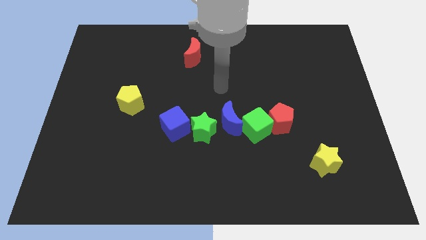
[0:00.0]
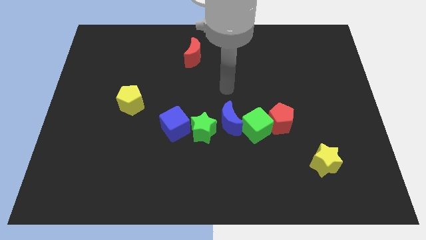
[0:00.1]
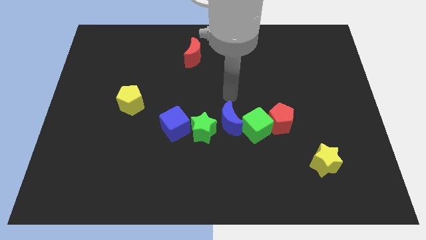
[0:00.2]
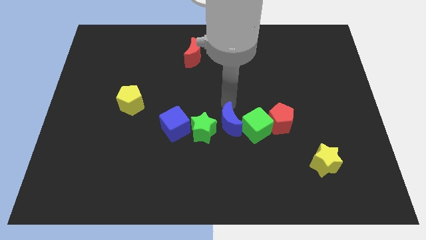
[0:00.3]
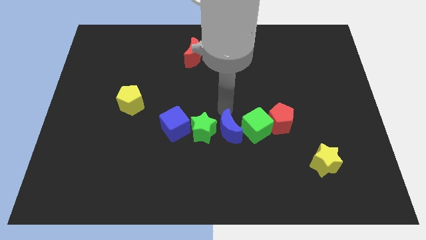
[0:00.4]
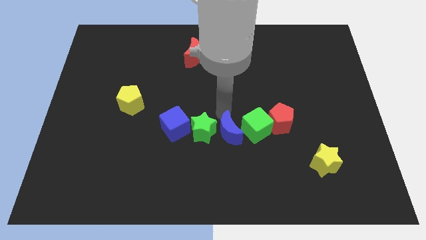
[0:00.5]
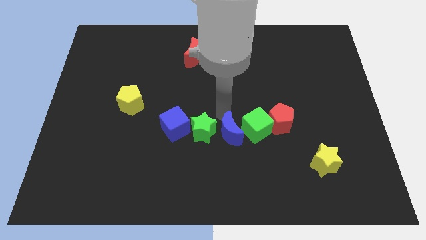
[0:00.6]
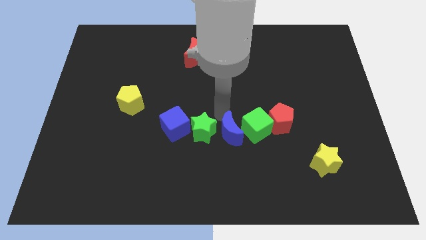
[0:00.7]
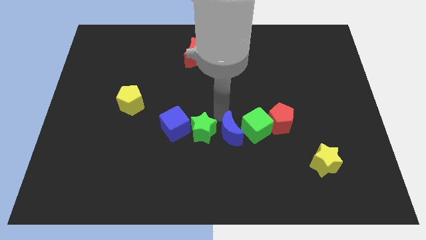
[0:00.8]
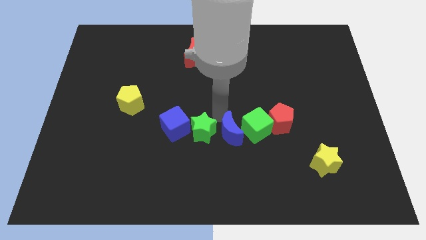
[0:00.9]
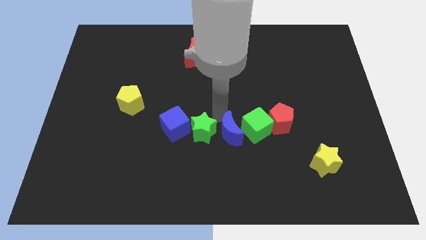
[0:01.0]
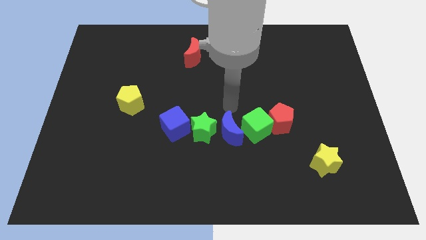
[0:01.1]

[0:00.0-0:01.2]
move the blue crescent slightly to the bottom line of blocks

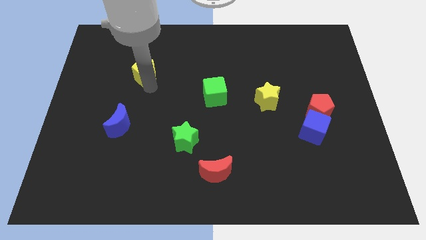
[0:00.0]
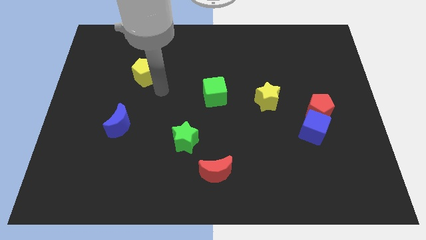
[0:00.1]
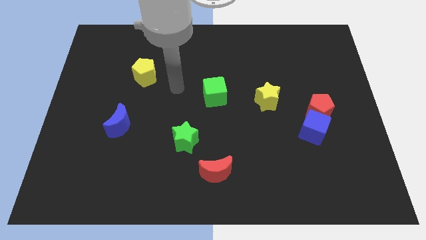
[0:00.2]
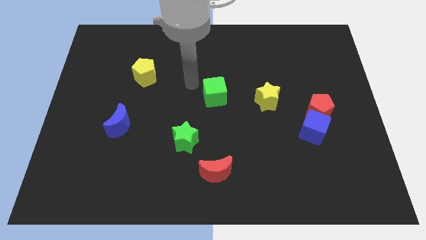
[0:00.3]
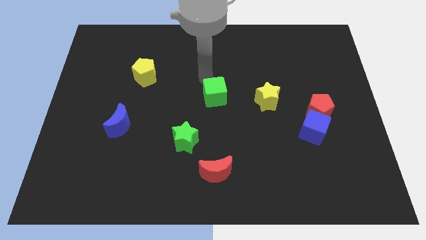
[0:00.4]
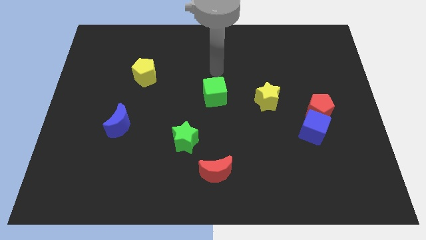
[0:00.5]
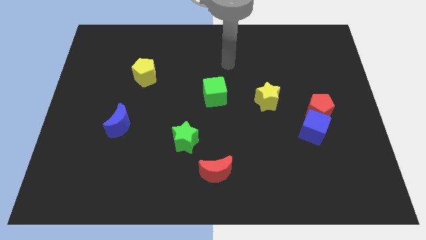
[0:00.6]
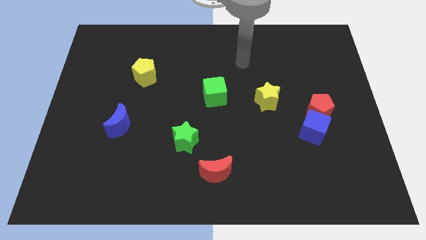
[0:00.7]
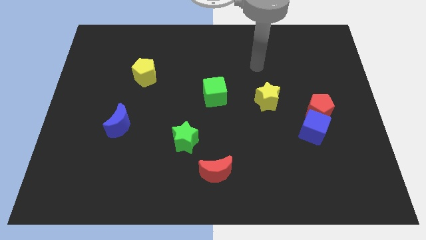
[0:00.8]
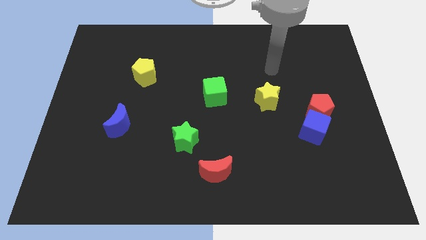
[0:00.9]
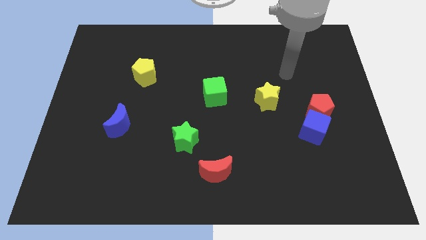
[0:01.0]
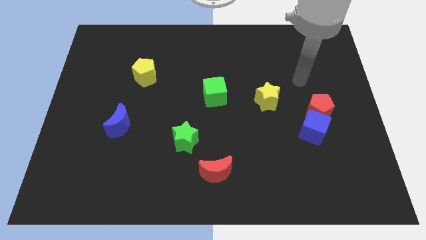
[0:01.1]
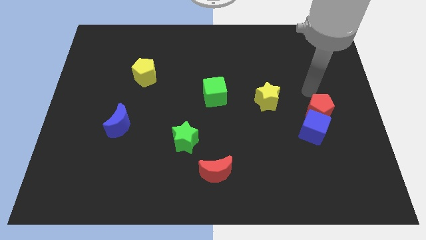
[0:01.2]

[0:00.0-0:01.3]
point your arm at the top of red pentagon

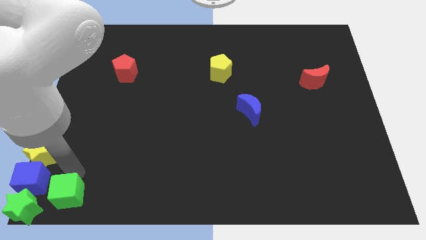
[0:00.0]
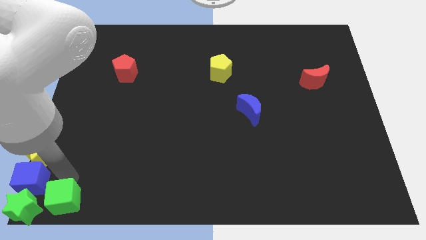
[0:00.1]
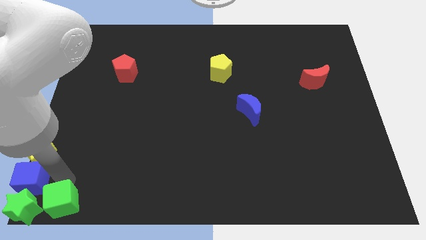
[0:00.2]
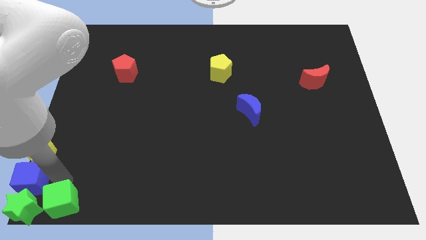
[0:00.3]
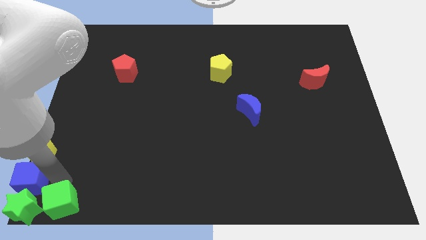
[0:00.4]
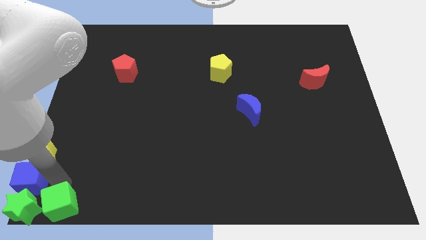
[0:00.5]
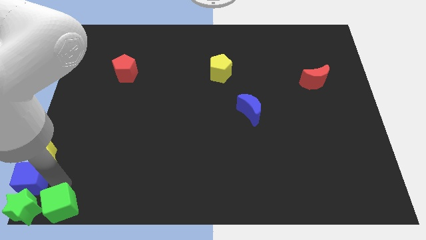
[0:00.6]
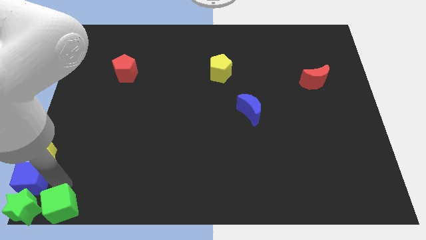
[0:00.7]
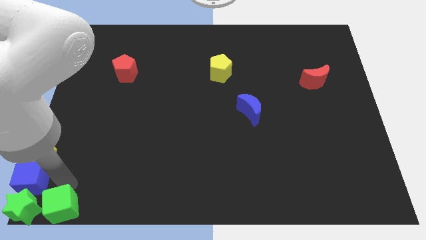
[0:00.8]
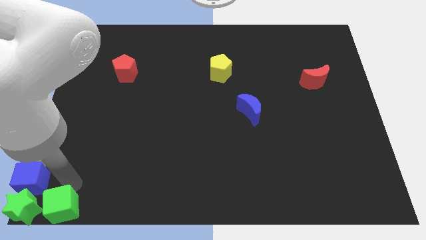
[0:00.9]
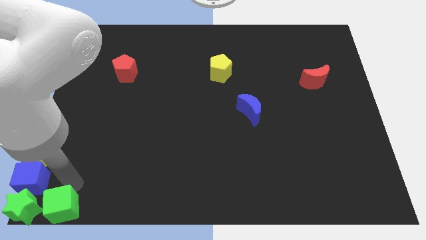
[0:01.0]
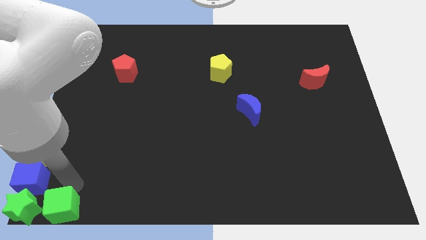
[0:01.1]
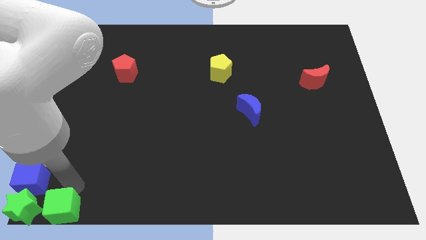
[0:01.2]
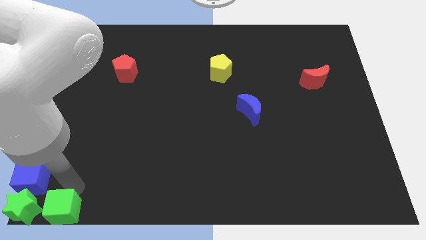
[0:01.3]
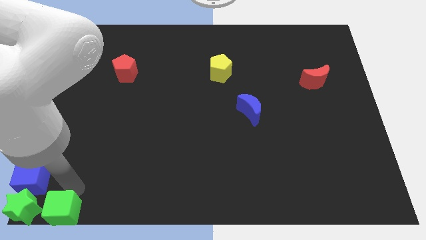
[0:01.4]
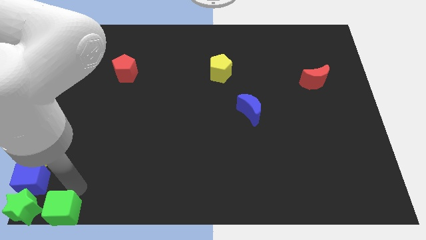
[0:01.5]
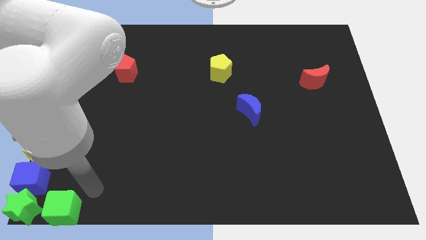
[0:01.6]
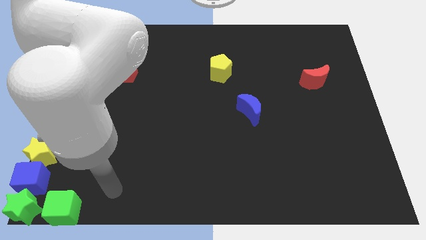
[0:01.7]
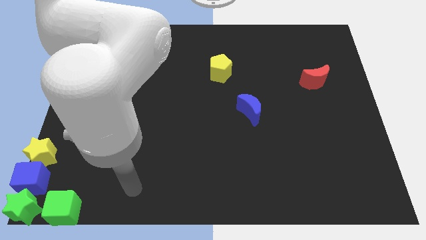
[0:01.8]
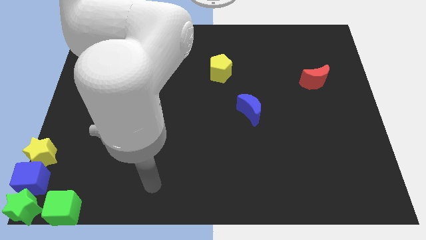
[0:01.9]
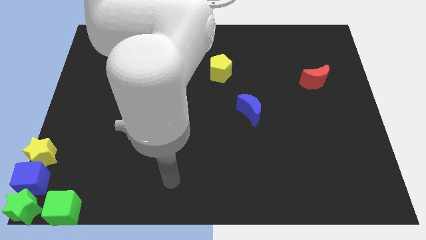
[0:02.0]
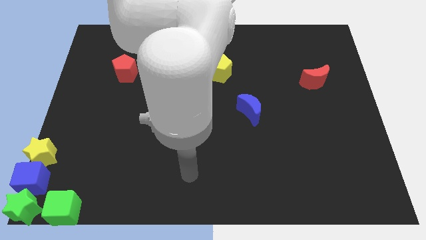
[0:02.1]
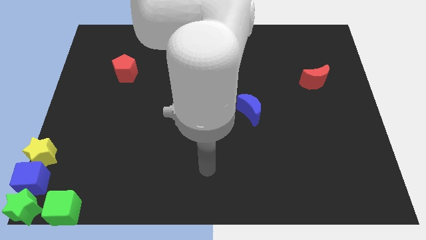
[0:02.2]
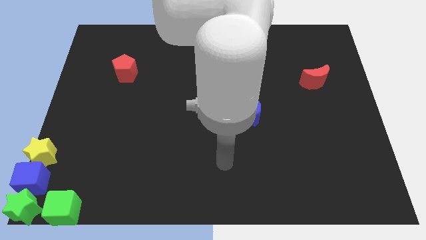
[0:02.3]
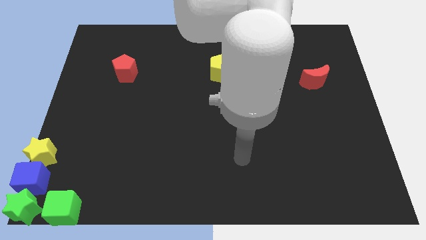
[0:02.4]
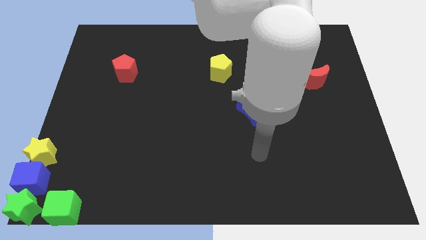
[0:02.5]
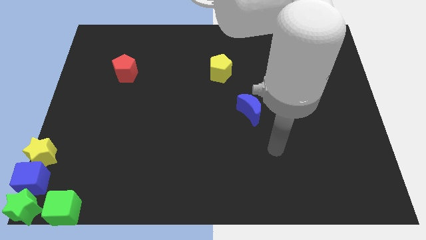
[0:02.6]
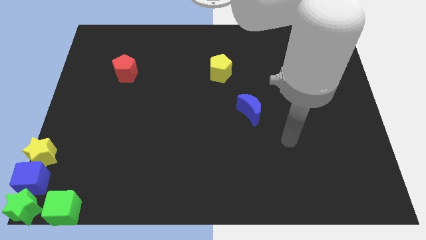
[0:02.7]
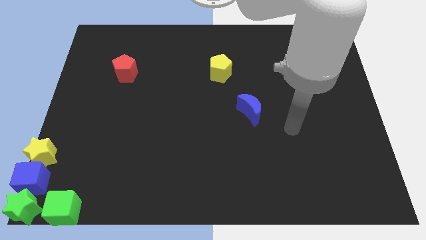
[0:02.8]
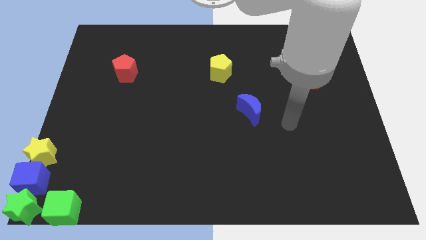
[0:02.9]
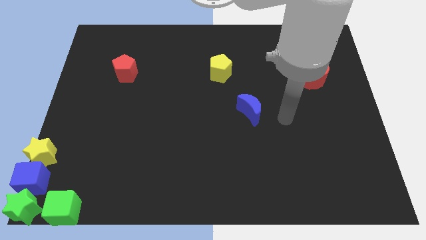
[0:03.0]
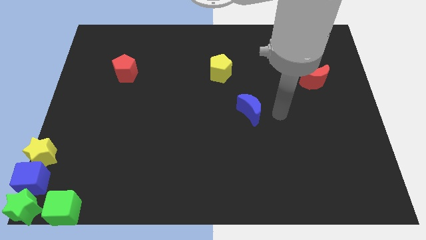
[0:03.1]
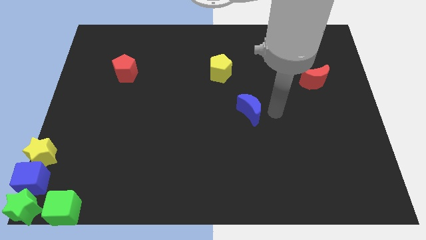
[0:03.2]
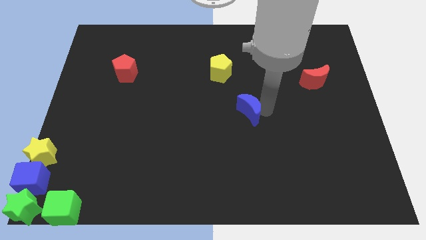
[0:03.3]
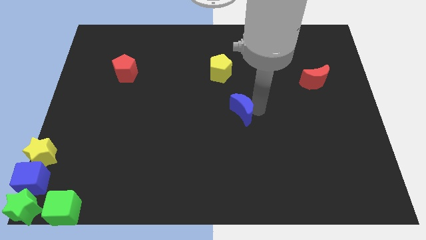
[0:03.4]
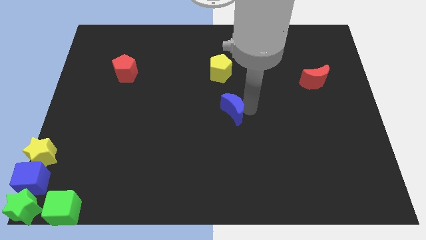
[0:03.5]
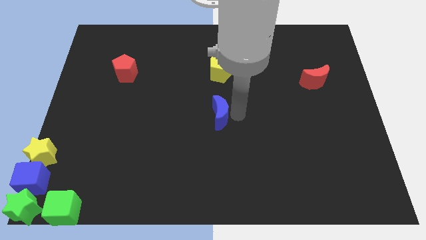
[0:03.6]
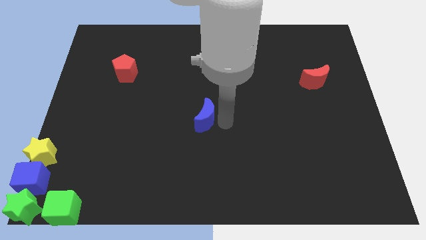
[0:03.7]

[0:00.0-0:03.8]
move right arm

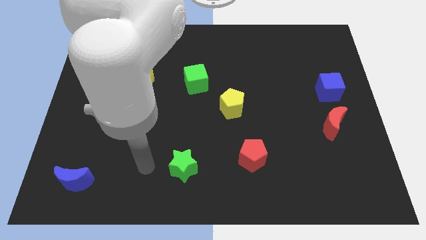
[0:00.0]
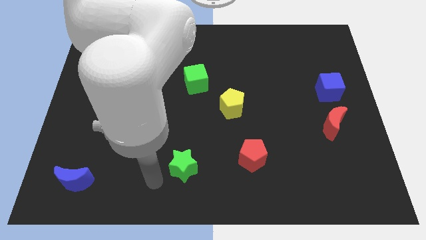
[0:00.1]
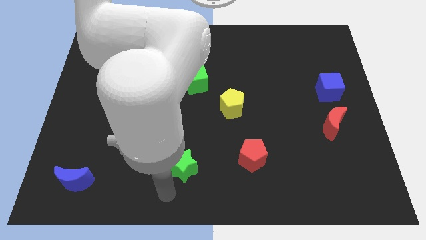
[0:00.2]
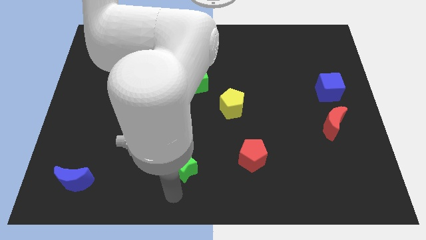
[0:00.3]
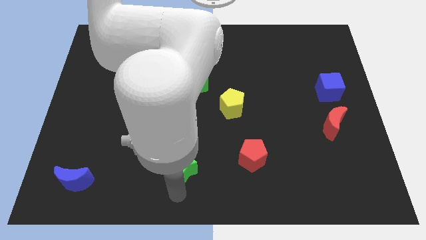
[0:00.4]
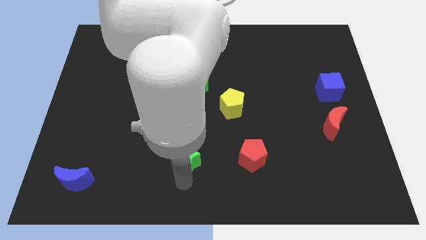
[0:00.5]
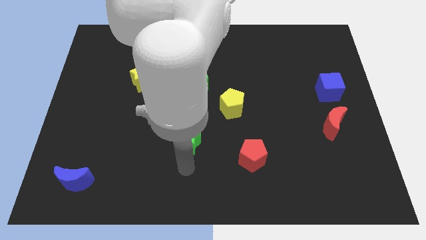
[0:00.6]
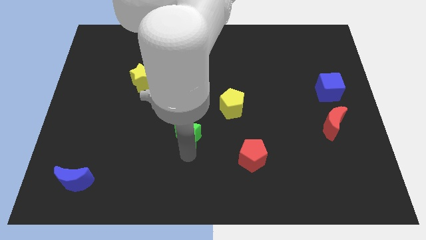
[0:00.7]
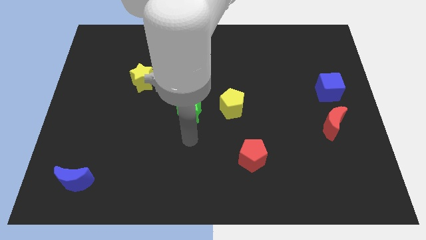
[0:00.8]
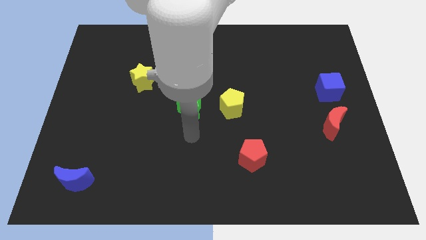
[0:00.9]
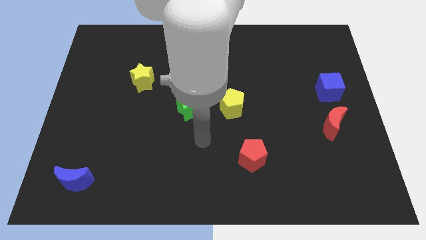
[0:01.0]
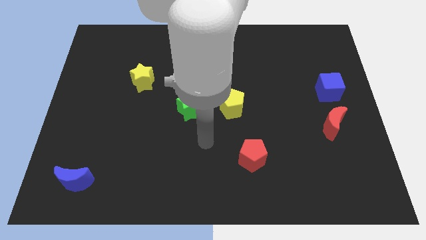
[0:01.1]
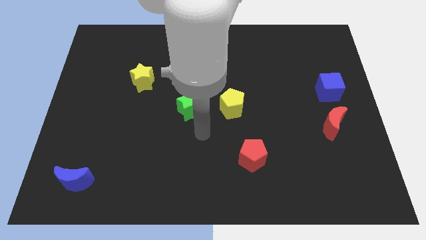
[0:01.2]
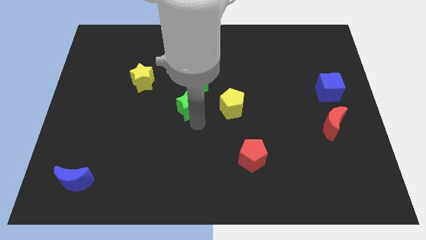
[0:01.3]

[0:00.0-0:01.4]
place the green star to the left of the yellow pentagon

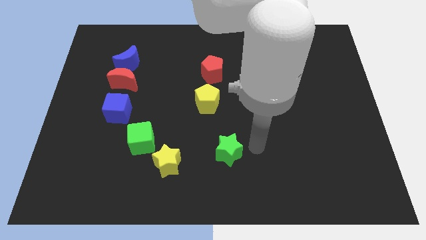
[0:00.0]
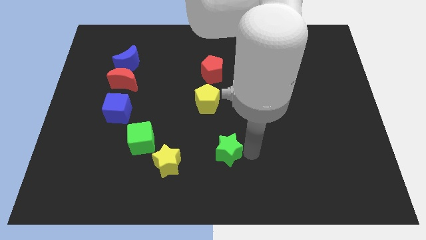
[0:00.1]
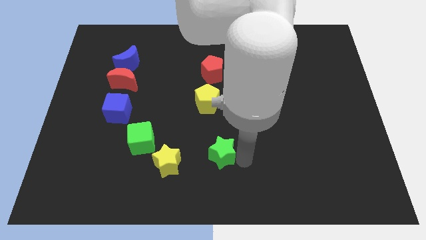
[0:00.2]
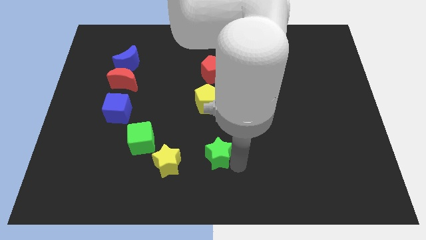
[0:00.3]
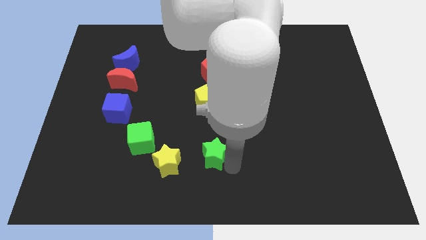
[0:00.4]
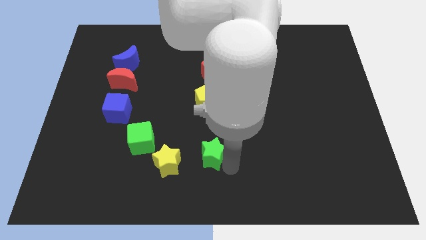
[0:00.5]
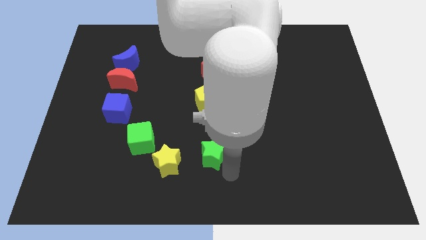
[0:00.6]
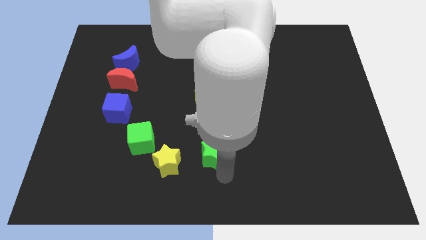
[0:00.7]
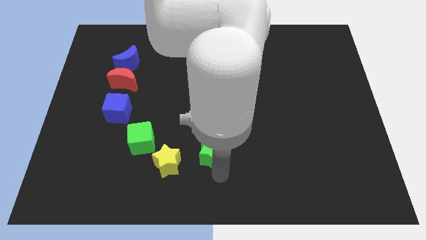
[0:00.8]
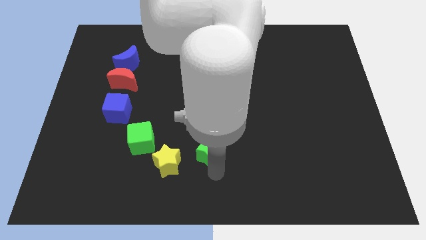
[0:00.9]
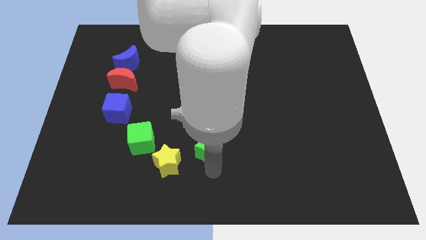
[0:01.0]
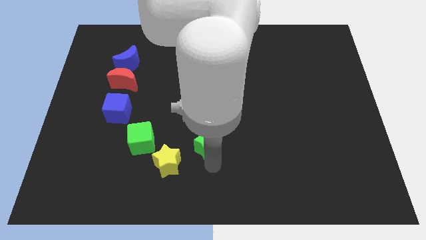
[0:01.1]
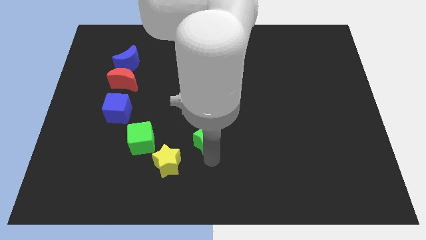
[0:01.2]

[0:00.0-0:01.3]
place green star below the yellow pentagon
